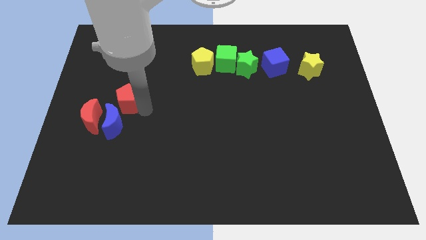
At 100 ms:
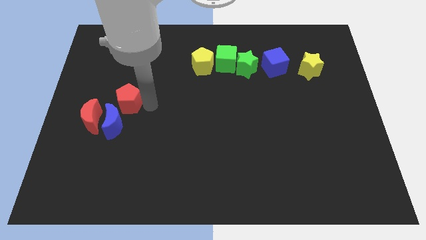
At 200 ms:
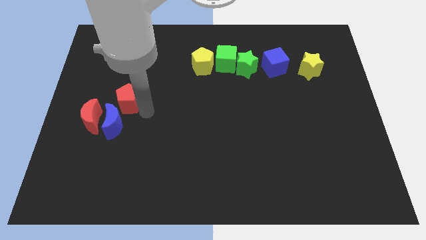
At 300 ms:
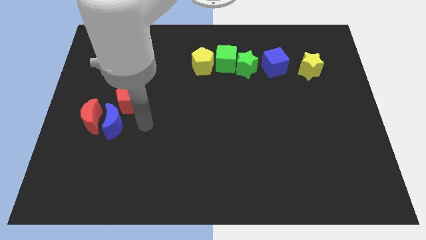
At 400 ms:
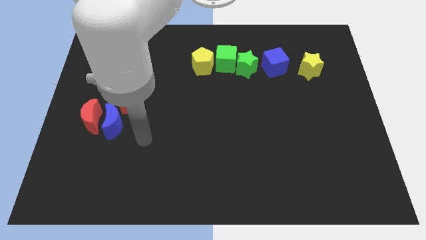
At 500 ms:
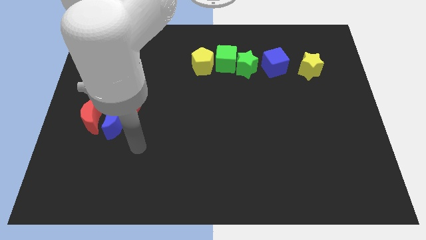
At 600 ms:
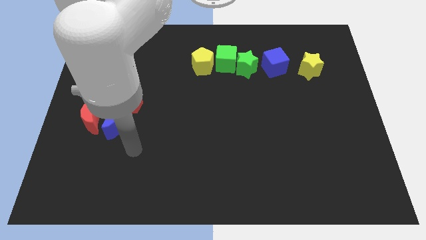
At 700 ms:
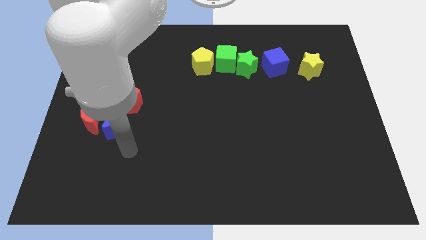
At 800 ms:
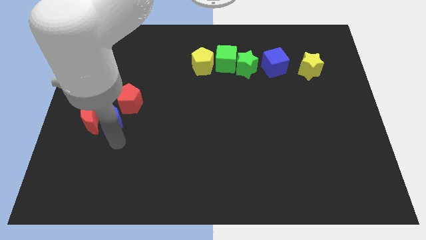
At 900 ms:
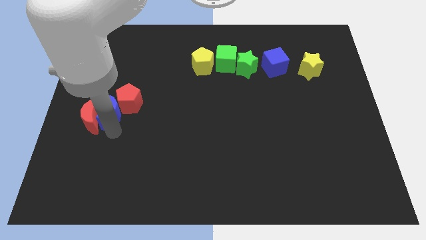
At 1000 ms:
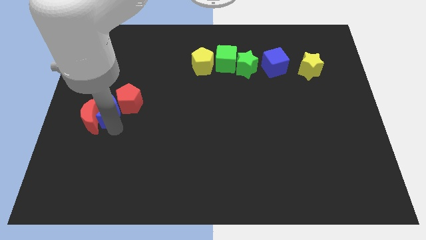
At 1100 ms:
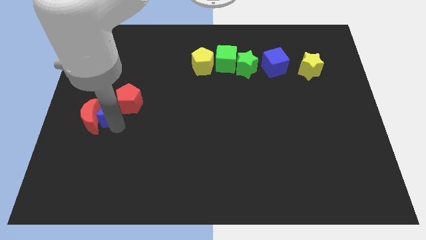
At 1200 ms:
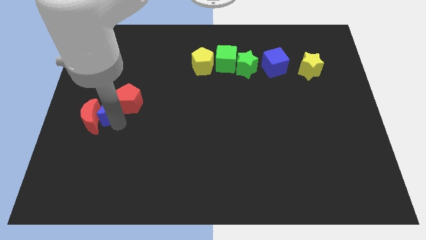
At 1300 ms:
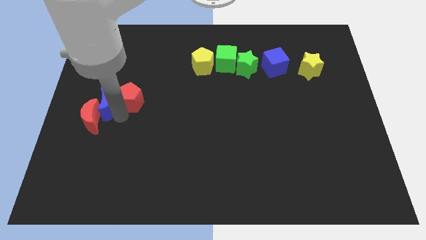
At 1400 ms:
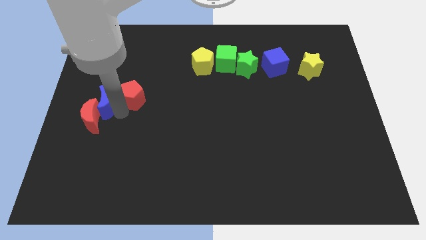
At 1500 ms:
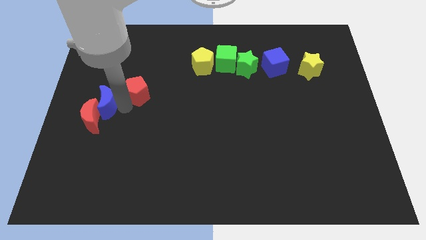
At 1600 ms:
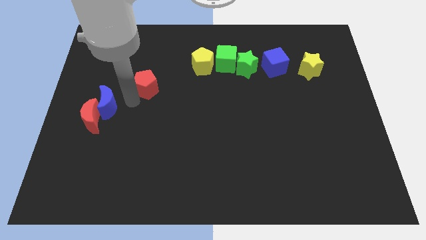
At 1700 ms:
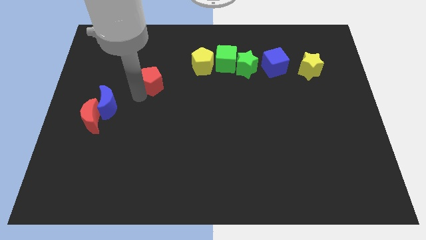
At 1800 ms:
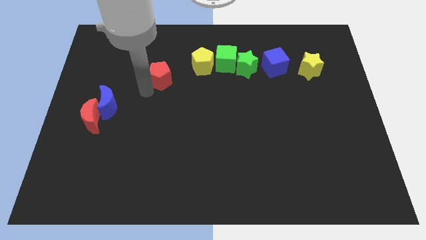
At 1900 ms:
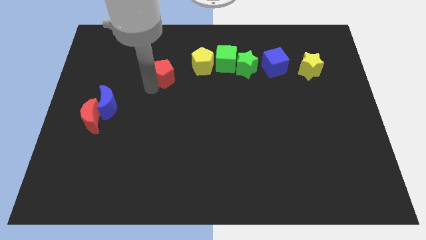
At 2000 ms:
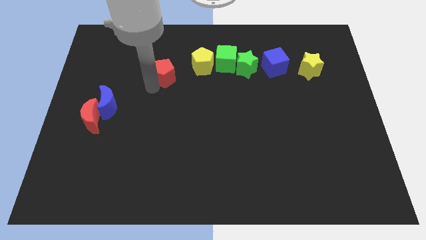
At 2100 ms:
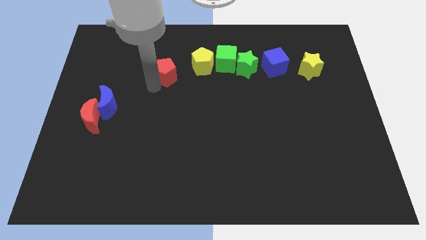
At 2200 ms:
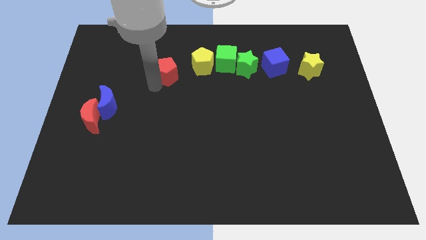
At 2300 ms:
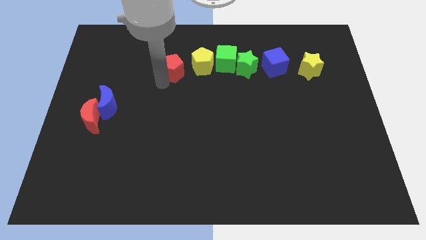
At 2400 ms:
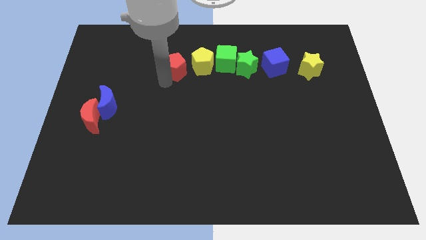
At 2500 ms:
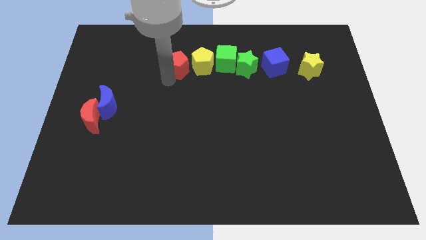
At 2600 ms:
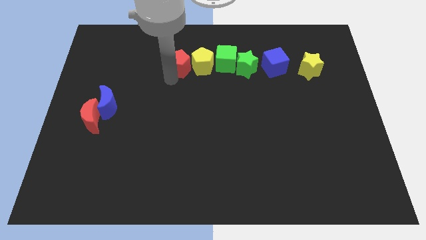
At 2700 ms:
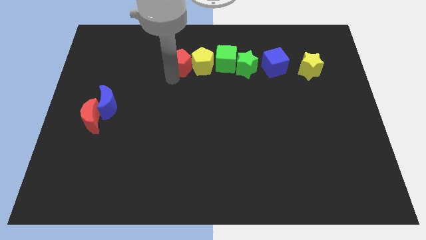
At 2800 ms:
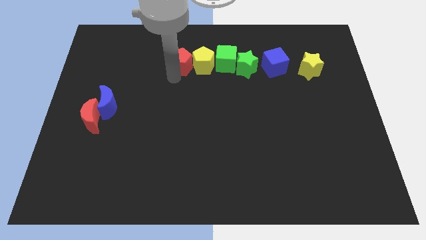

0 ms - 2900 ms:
move red pentagon into yellow pentagon

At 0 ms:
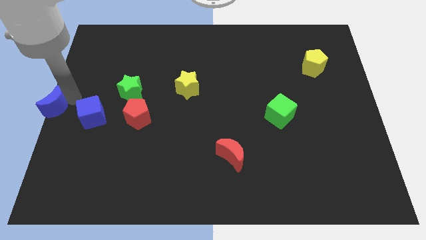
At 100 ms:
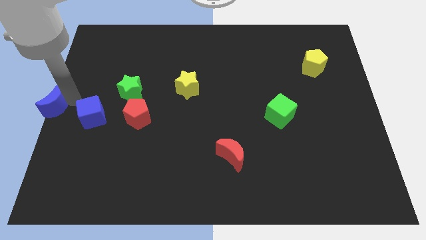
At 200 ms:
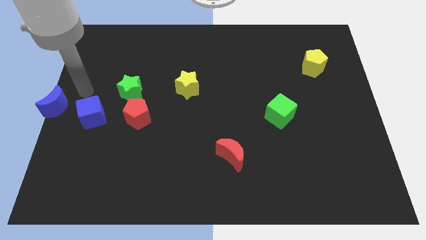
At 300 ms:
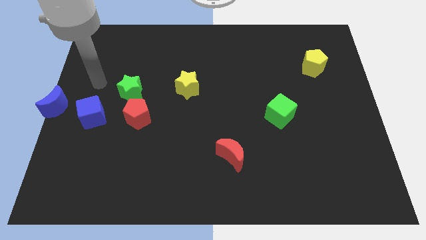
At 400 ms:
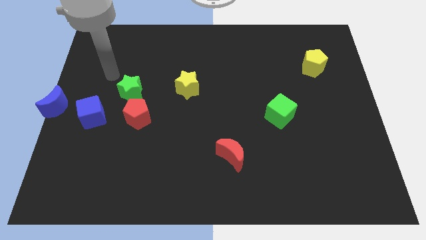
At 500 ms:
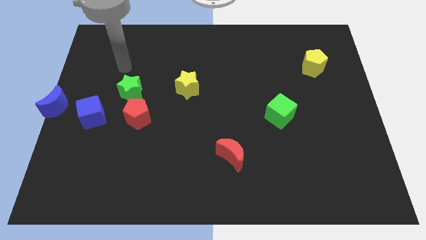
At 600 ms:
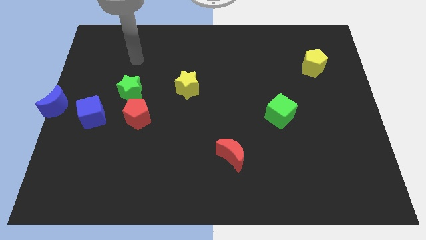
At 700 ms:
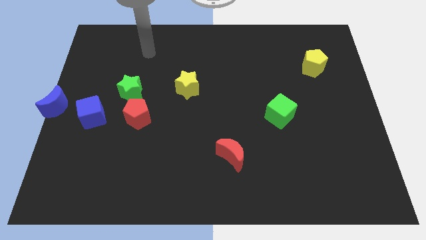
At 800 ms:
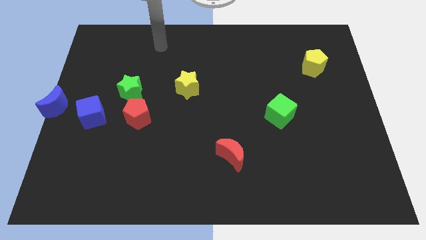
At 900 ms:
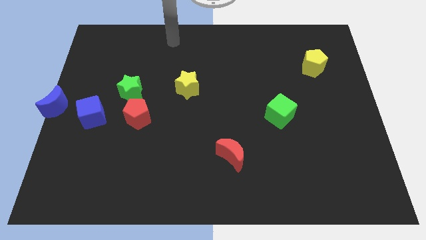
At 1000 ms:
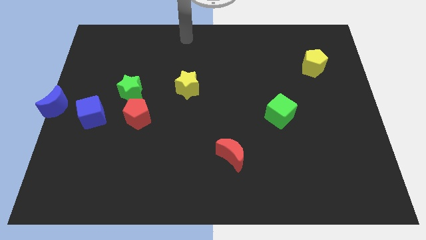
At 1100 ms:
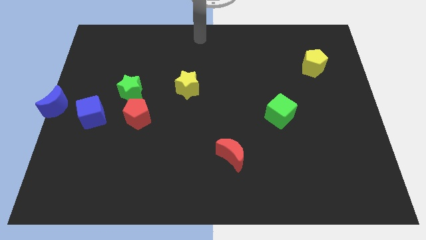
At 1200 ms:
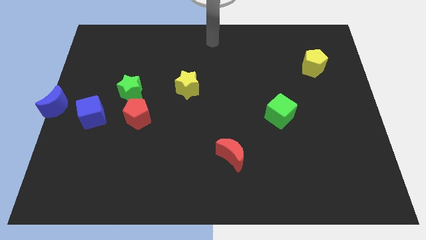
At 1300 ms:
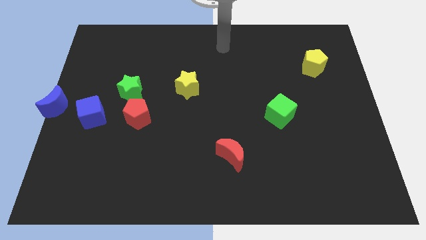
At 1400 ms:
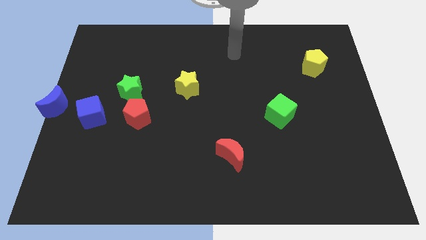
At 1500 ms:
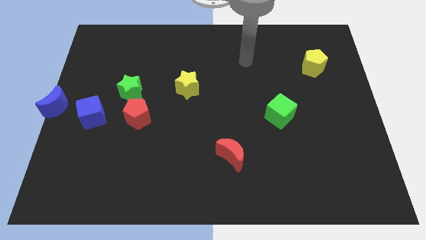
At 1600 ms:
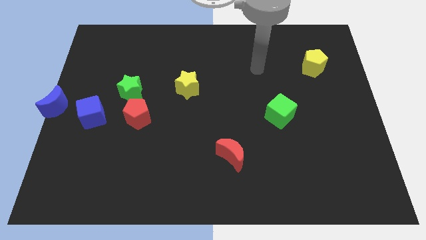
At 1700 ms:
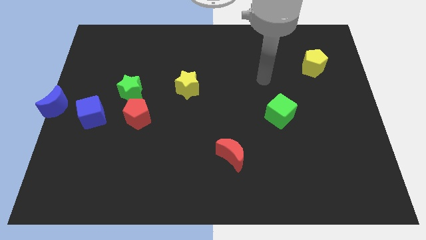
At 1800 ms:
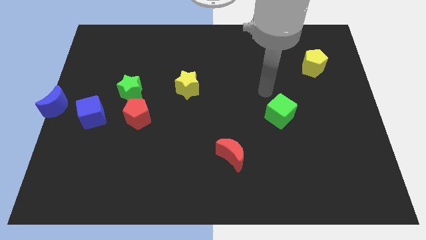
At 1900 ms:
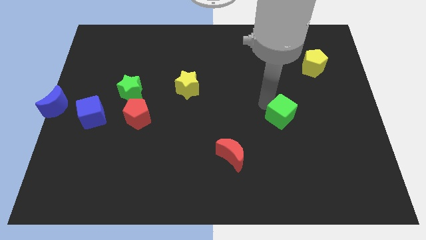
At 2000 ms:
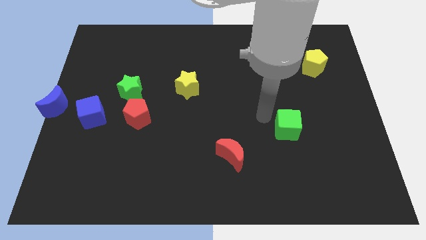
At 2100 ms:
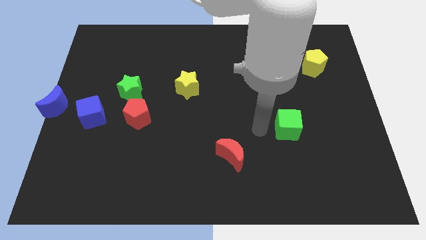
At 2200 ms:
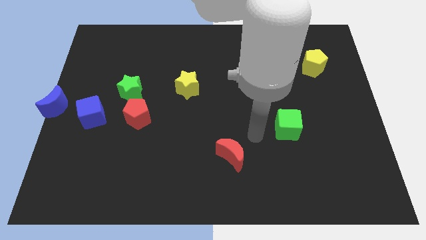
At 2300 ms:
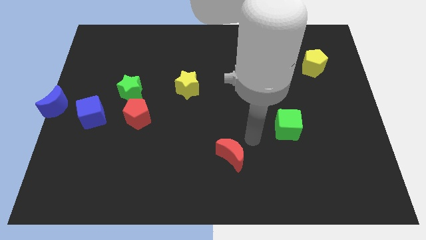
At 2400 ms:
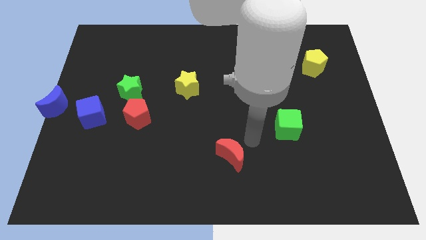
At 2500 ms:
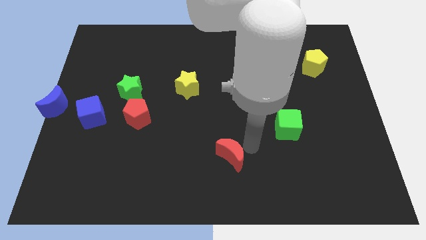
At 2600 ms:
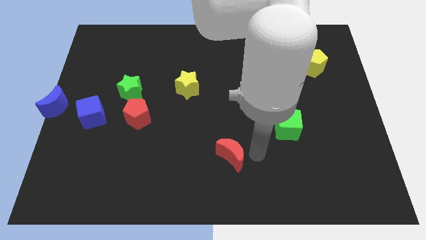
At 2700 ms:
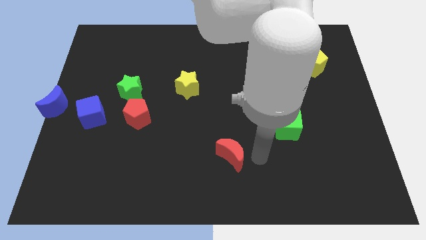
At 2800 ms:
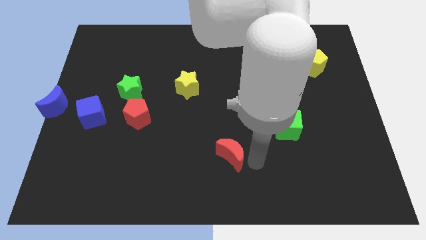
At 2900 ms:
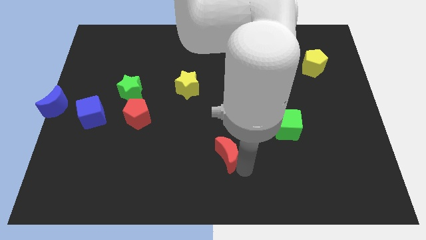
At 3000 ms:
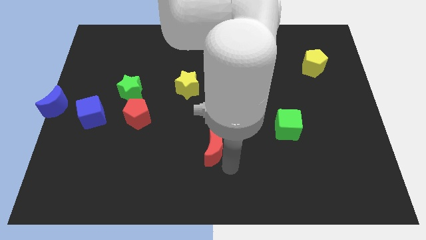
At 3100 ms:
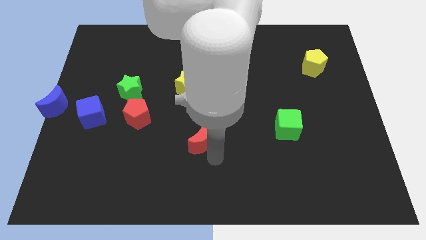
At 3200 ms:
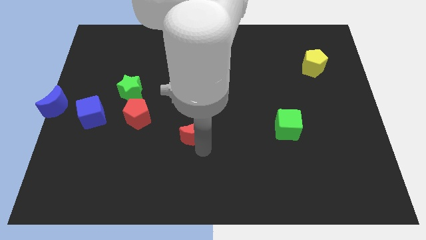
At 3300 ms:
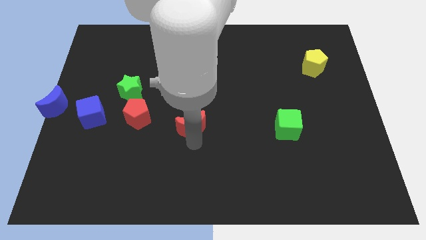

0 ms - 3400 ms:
drag the red moon towards the center

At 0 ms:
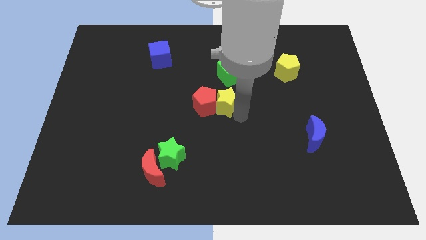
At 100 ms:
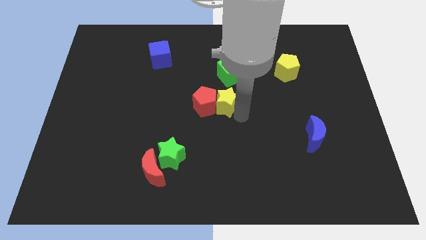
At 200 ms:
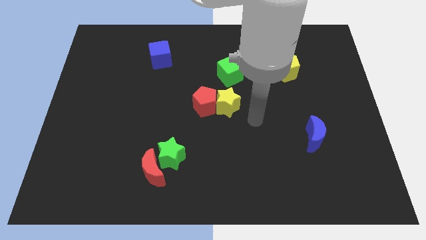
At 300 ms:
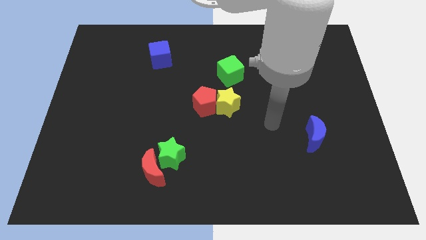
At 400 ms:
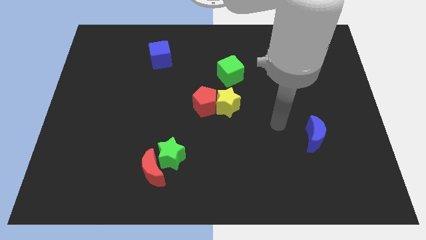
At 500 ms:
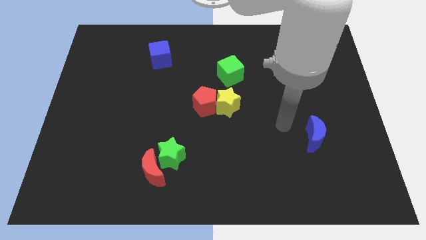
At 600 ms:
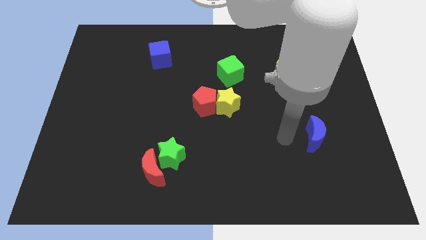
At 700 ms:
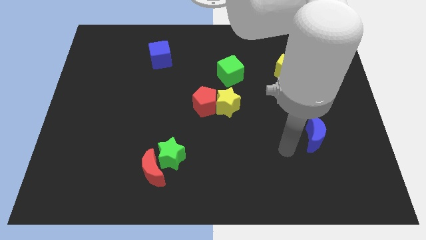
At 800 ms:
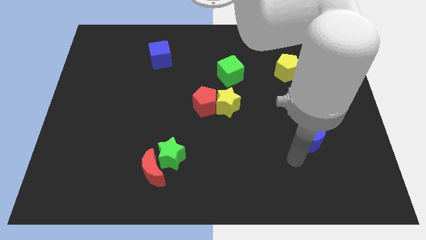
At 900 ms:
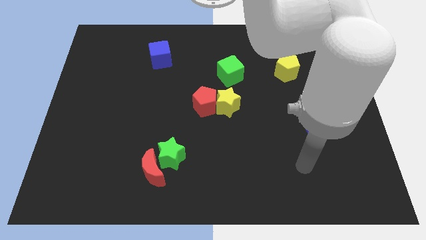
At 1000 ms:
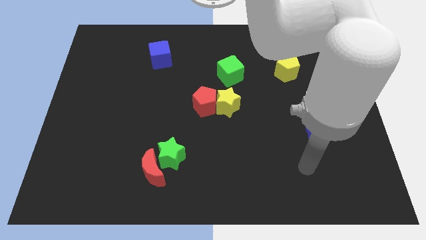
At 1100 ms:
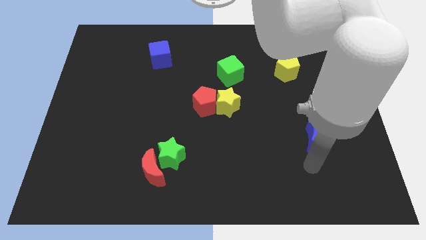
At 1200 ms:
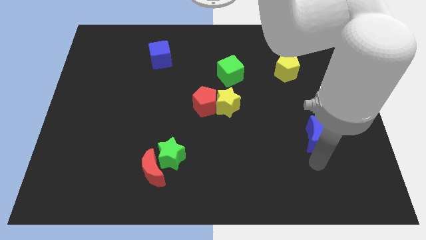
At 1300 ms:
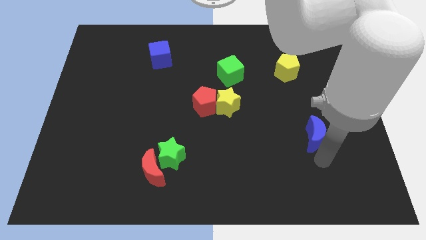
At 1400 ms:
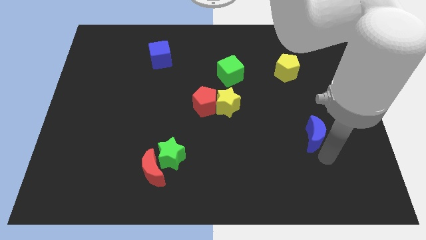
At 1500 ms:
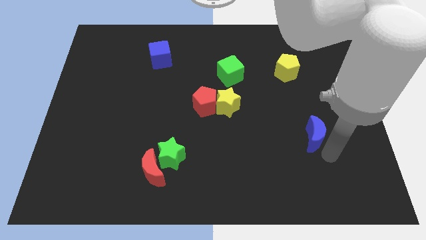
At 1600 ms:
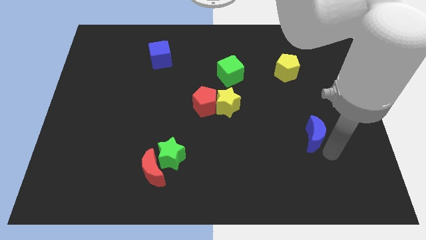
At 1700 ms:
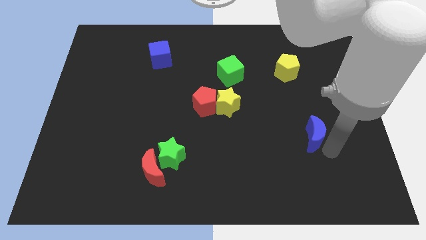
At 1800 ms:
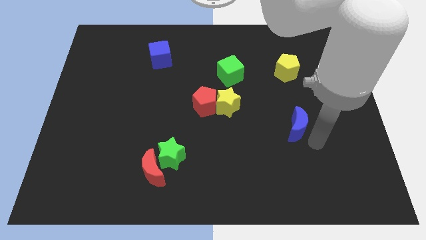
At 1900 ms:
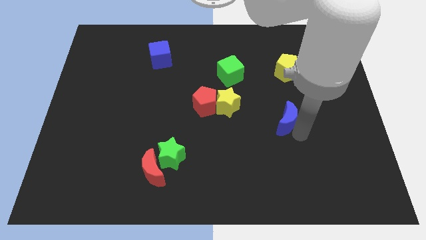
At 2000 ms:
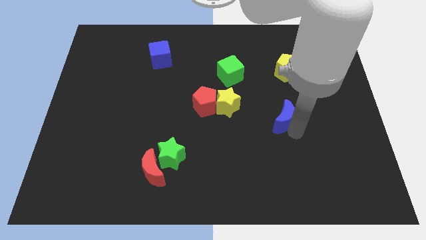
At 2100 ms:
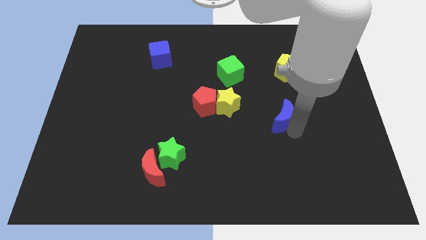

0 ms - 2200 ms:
move blue mon to the center

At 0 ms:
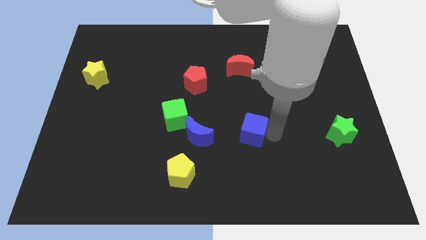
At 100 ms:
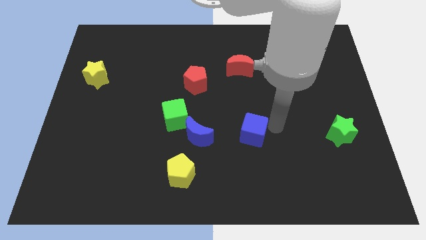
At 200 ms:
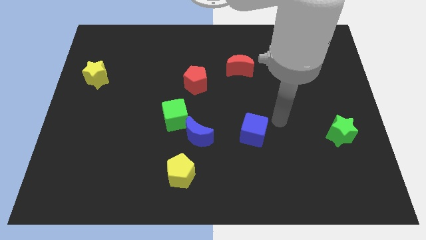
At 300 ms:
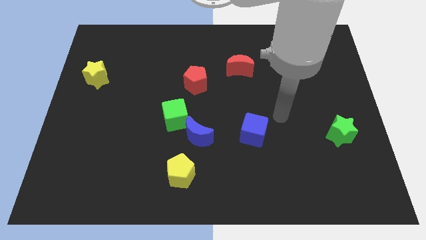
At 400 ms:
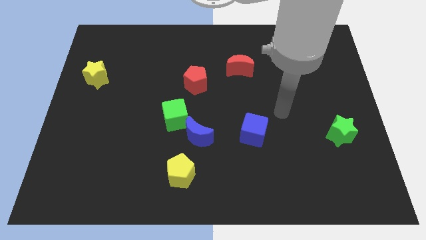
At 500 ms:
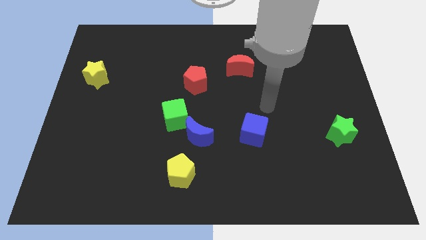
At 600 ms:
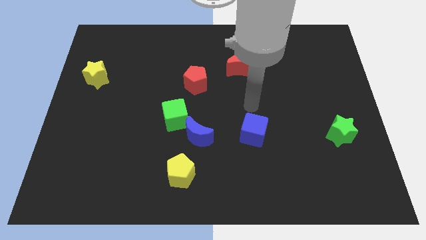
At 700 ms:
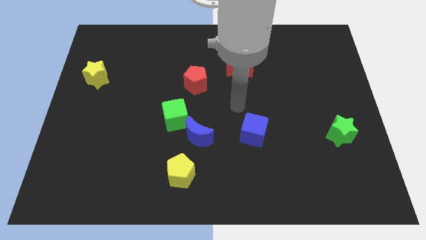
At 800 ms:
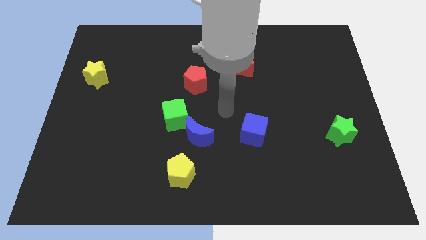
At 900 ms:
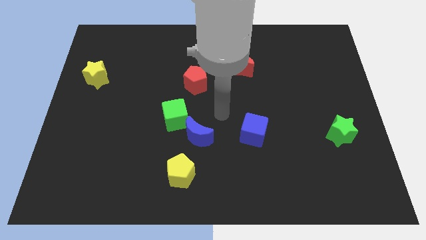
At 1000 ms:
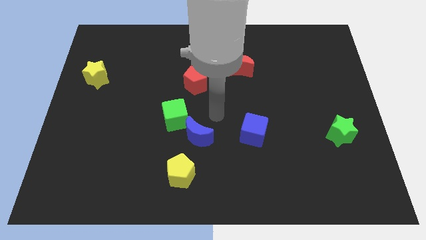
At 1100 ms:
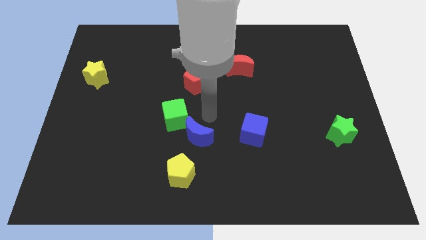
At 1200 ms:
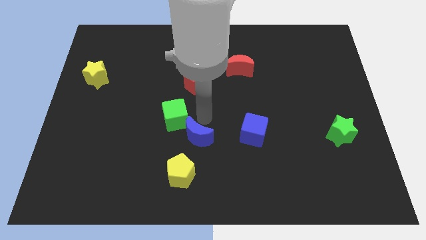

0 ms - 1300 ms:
point your arm at the top of blue moon
